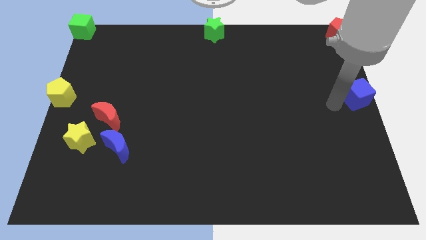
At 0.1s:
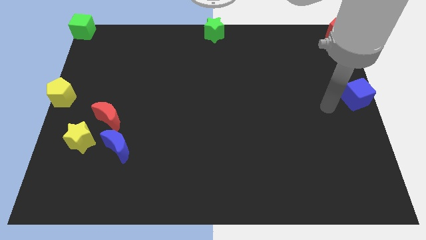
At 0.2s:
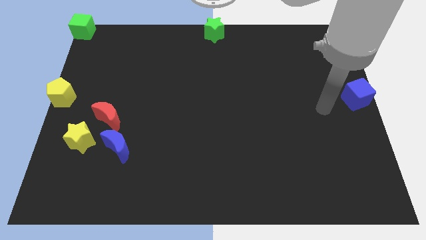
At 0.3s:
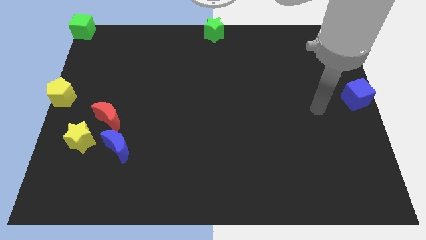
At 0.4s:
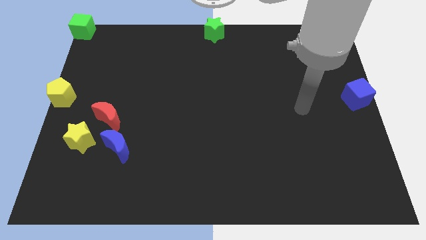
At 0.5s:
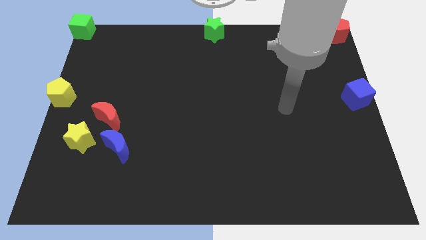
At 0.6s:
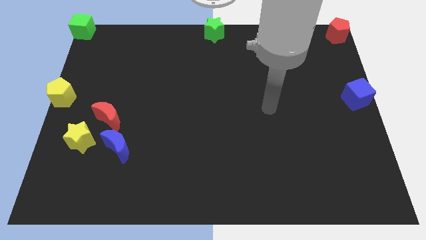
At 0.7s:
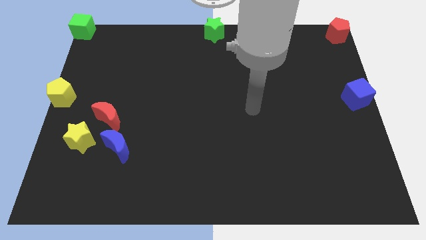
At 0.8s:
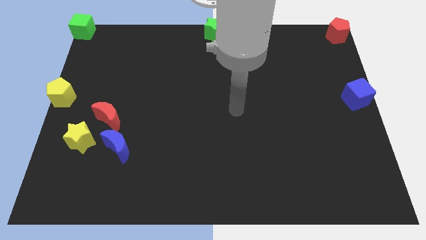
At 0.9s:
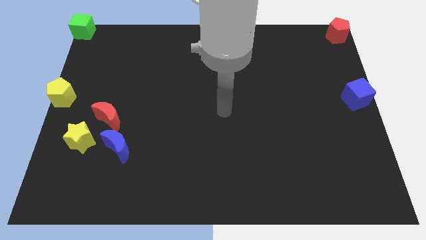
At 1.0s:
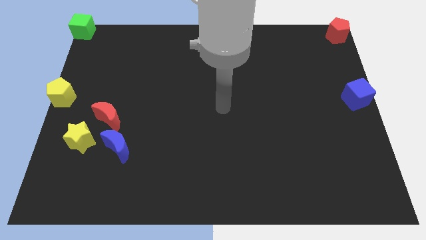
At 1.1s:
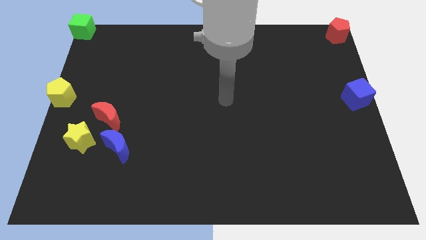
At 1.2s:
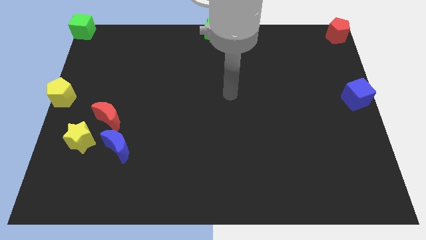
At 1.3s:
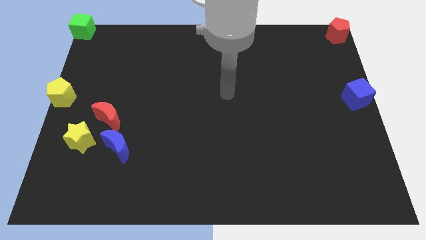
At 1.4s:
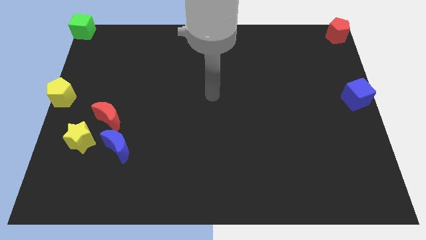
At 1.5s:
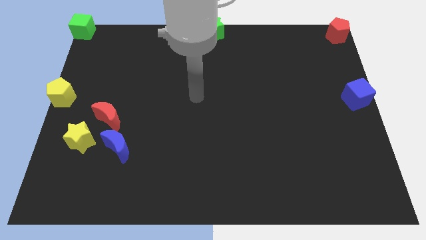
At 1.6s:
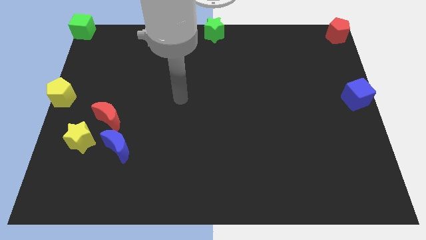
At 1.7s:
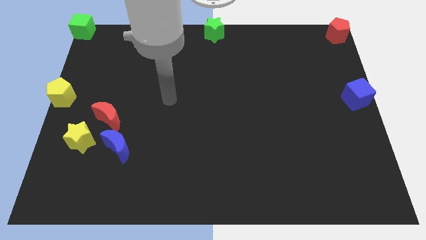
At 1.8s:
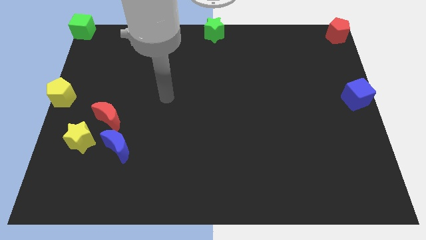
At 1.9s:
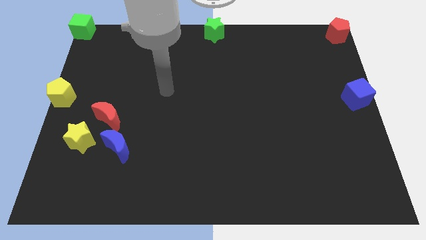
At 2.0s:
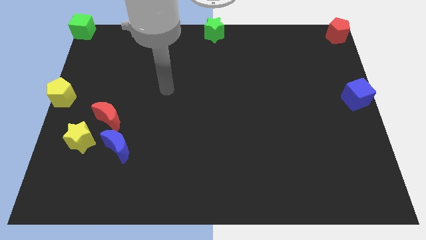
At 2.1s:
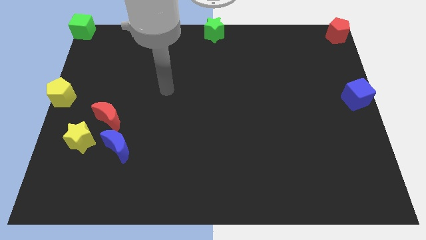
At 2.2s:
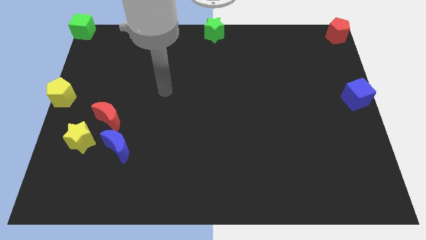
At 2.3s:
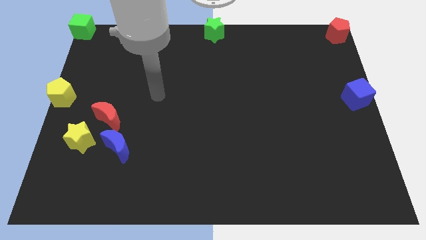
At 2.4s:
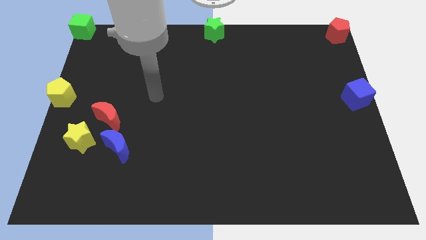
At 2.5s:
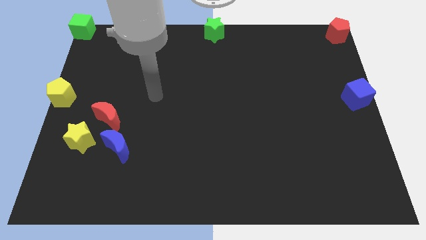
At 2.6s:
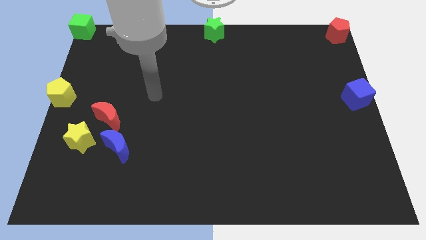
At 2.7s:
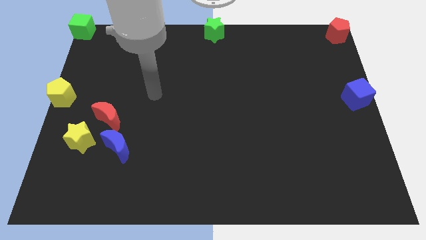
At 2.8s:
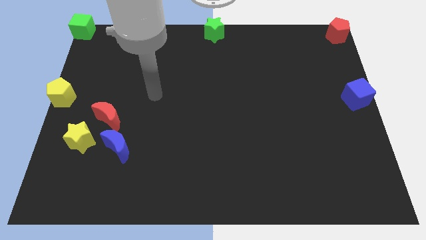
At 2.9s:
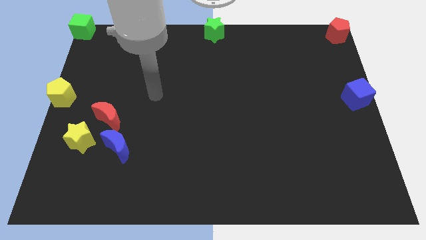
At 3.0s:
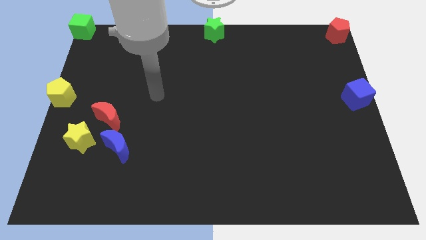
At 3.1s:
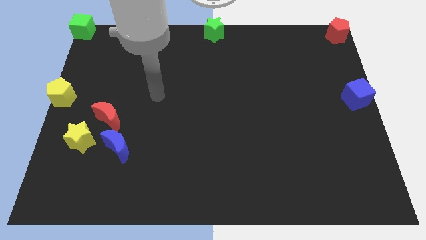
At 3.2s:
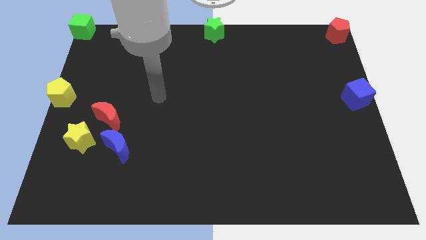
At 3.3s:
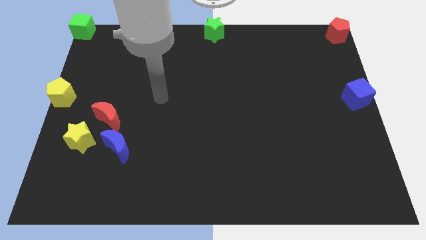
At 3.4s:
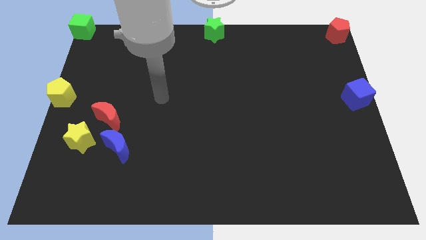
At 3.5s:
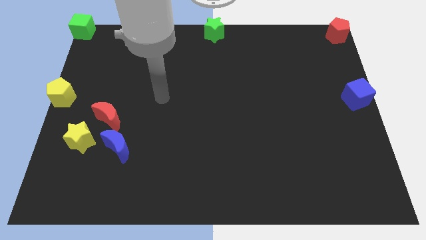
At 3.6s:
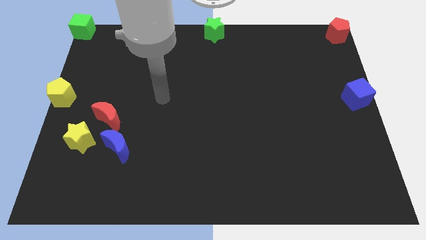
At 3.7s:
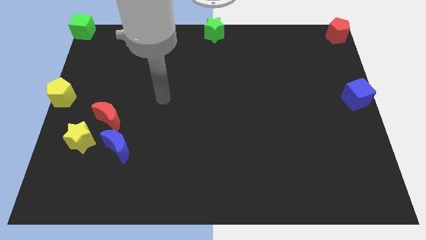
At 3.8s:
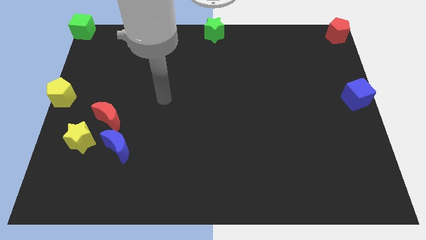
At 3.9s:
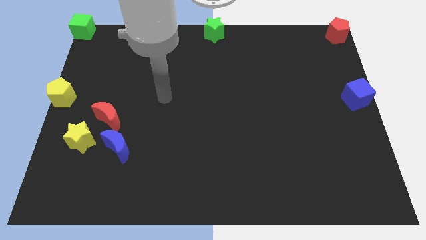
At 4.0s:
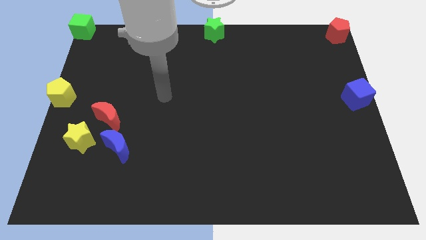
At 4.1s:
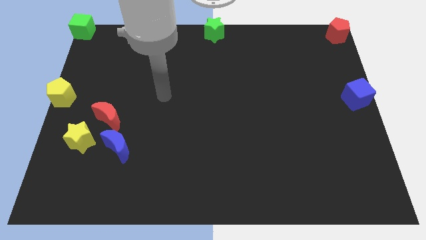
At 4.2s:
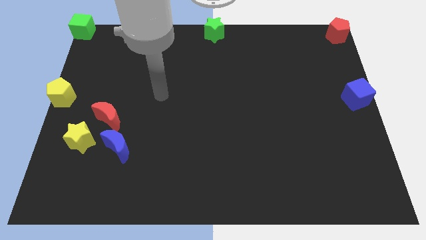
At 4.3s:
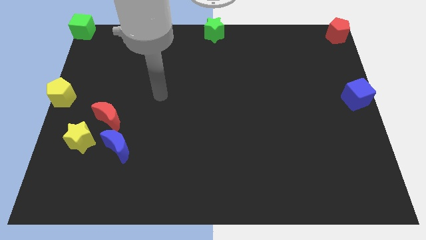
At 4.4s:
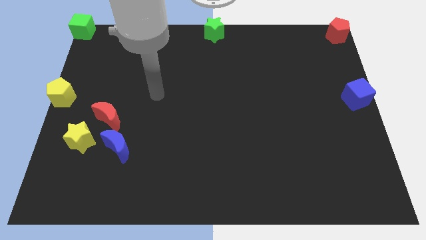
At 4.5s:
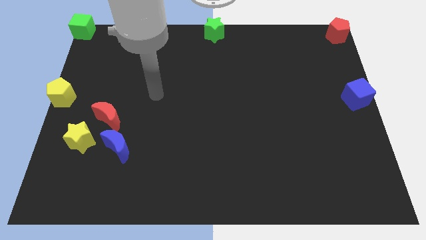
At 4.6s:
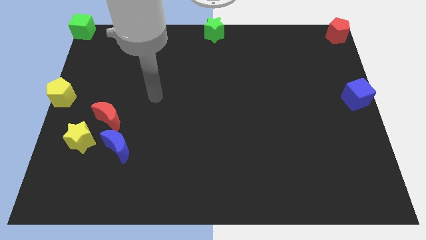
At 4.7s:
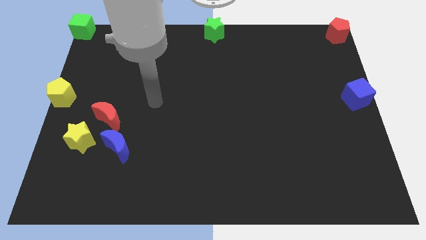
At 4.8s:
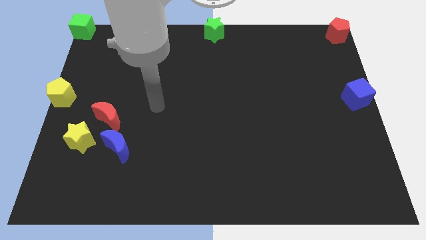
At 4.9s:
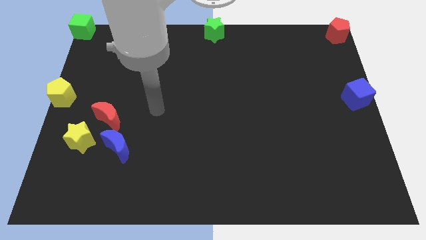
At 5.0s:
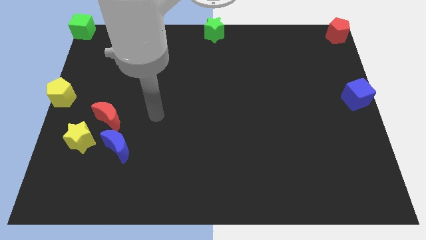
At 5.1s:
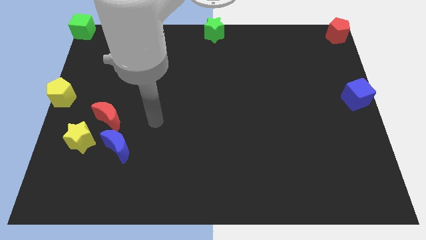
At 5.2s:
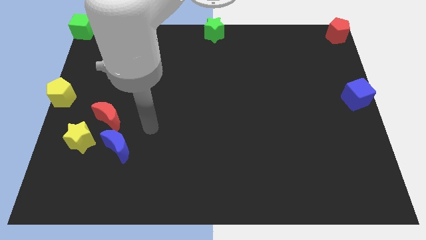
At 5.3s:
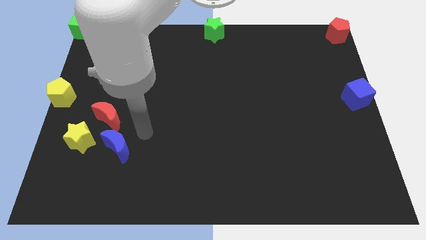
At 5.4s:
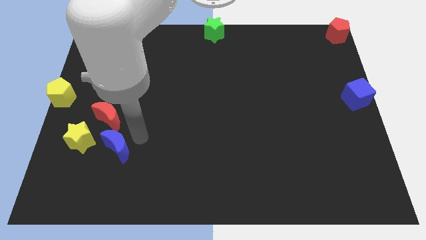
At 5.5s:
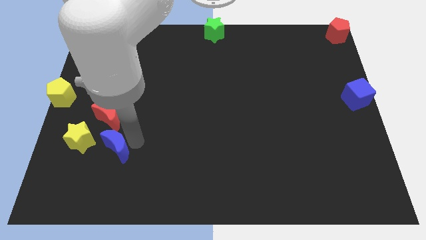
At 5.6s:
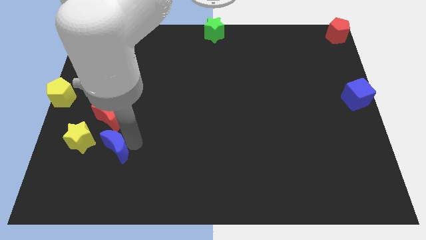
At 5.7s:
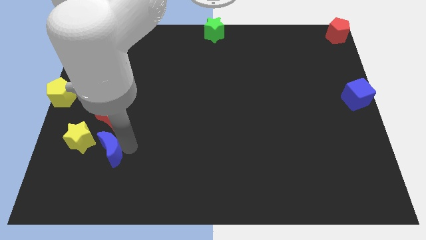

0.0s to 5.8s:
tap the right side of blue crescent

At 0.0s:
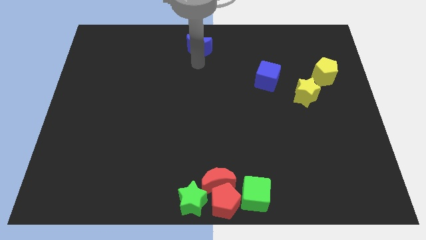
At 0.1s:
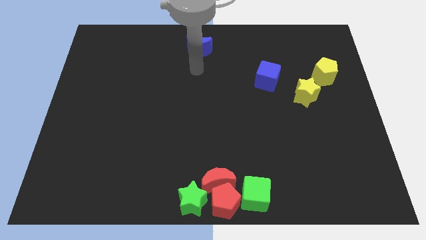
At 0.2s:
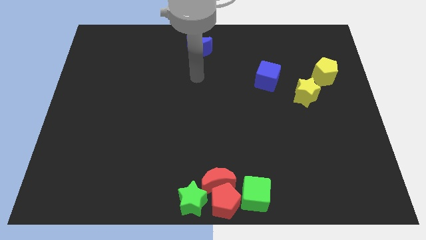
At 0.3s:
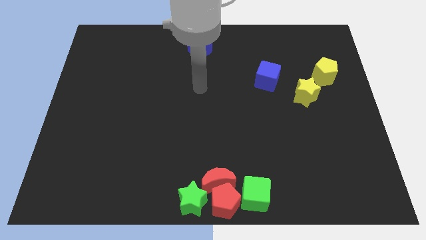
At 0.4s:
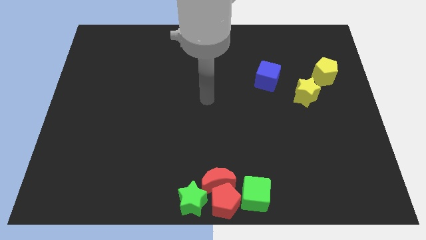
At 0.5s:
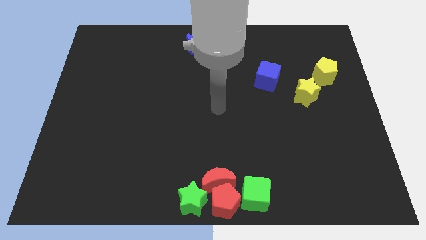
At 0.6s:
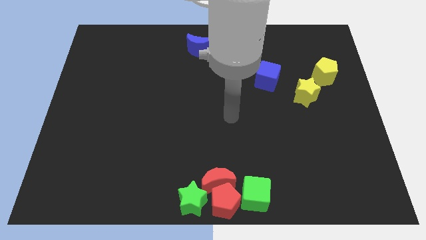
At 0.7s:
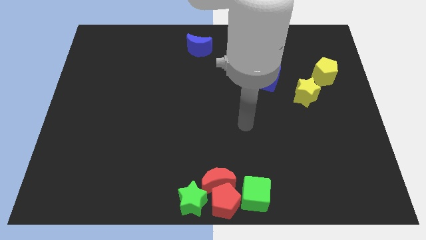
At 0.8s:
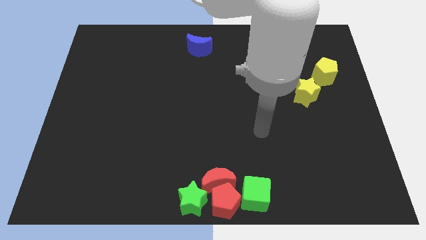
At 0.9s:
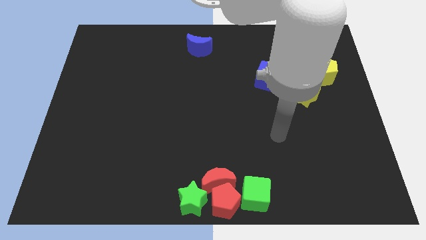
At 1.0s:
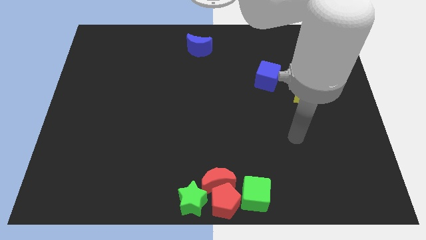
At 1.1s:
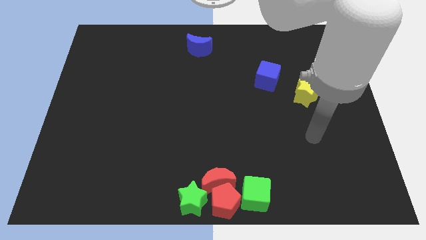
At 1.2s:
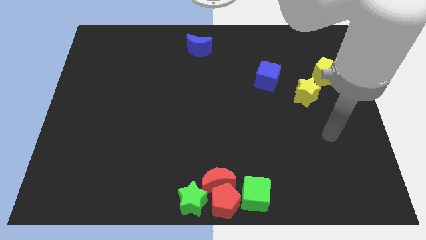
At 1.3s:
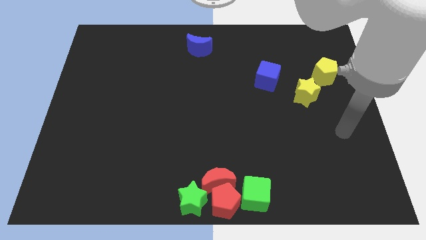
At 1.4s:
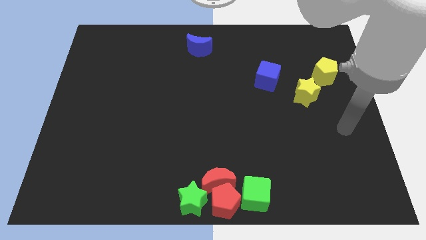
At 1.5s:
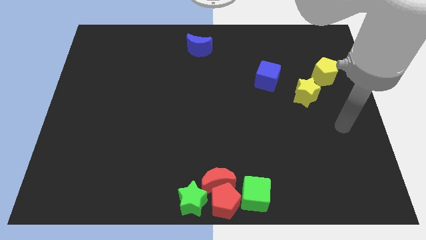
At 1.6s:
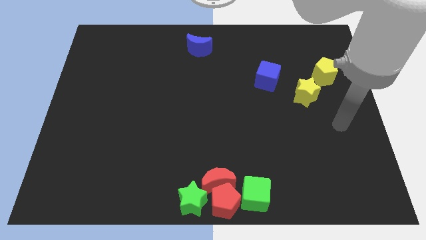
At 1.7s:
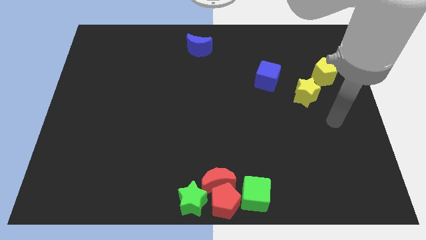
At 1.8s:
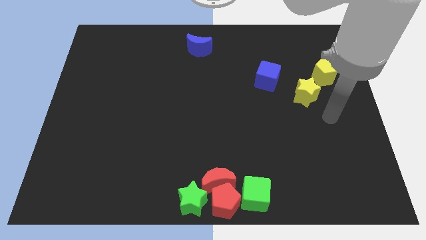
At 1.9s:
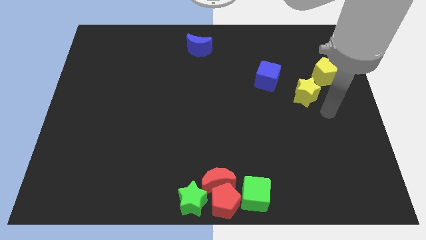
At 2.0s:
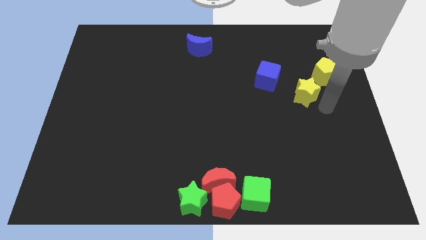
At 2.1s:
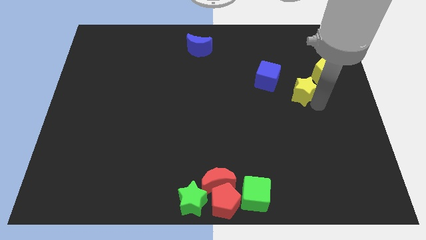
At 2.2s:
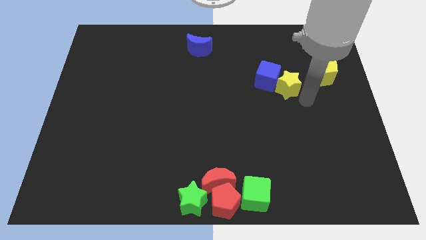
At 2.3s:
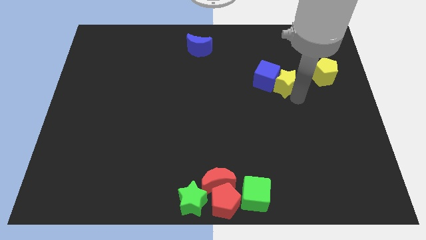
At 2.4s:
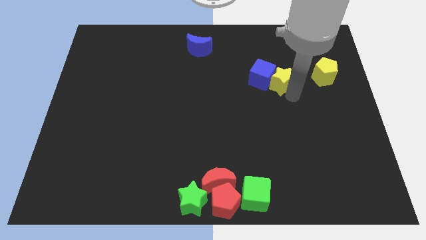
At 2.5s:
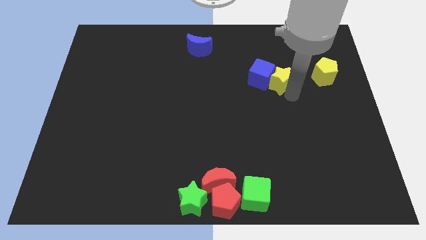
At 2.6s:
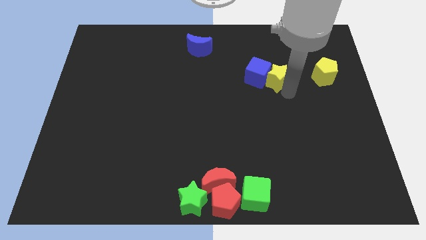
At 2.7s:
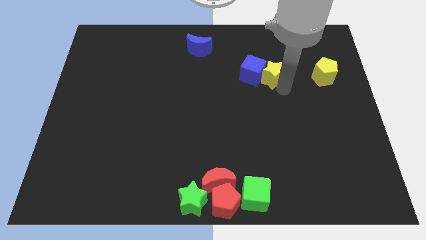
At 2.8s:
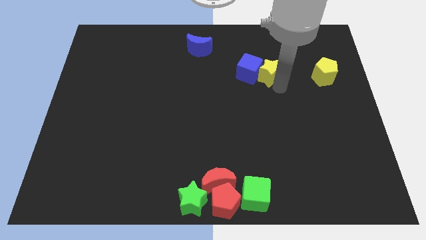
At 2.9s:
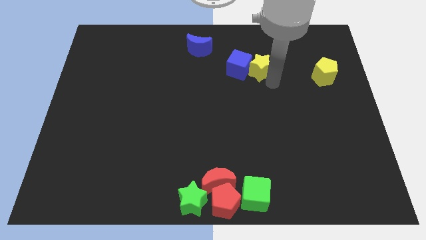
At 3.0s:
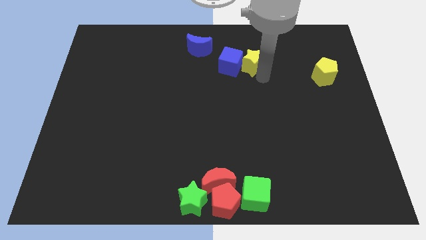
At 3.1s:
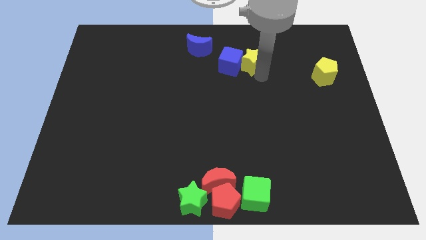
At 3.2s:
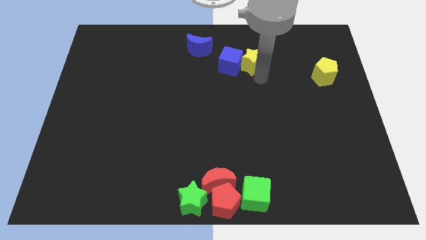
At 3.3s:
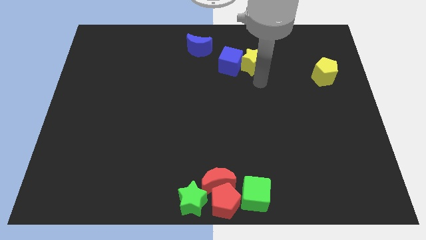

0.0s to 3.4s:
push the yellow star into the blue cube
